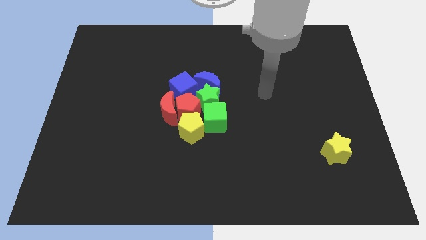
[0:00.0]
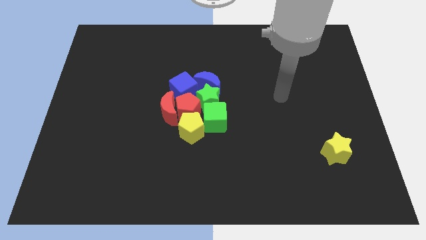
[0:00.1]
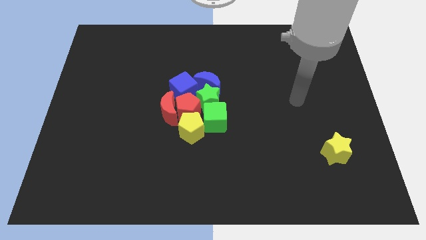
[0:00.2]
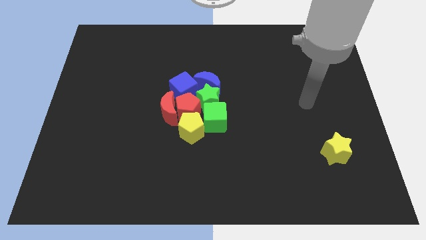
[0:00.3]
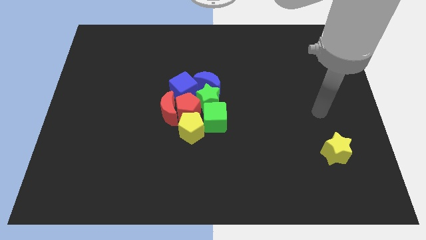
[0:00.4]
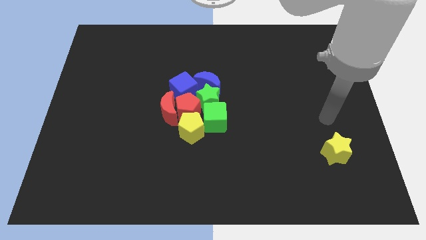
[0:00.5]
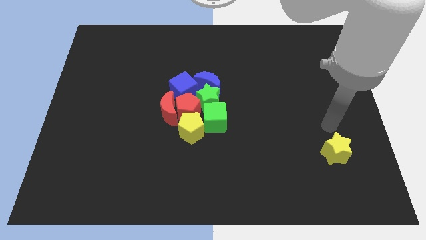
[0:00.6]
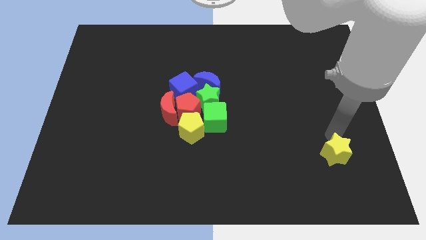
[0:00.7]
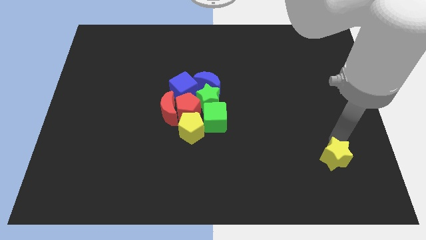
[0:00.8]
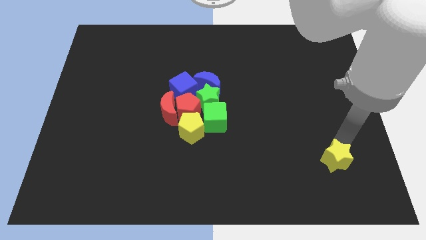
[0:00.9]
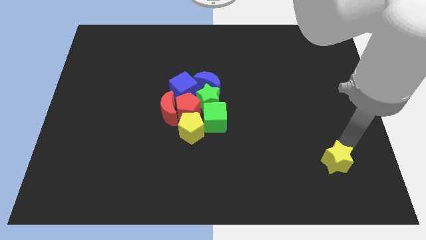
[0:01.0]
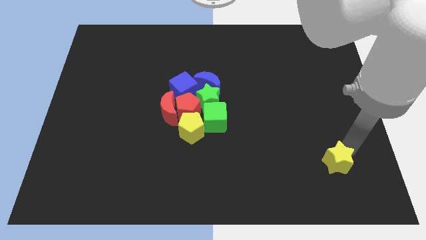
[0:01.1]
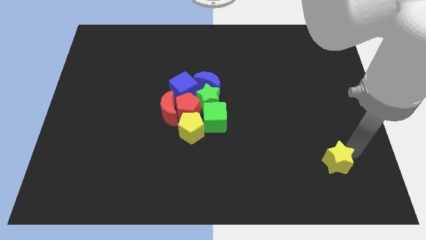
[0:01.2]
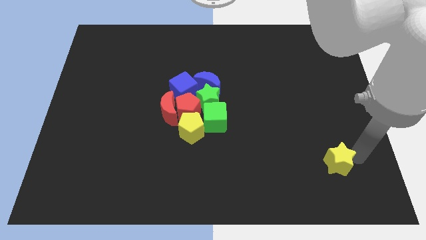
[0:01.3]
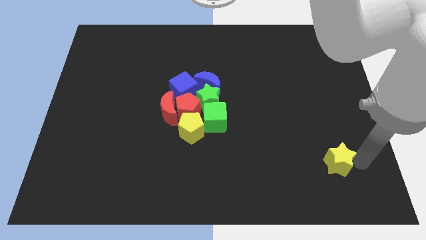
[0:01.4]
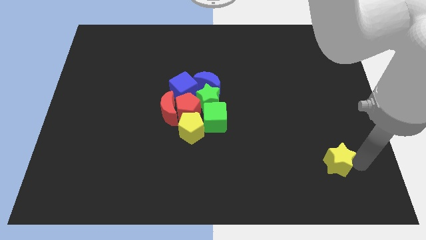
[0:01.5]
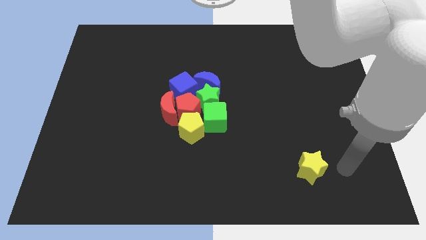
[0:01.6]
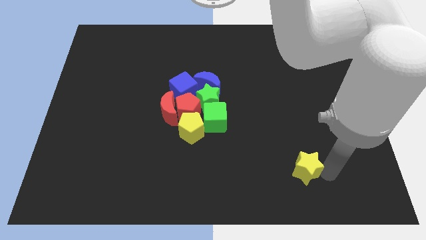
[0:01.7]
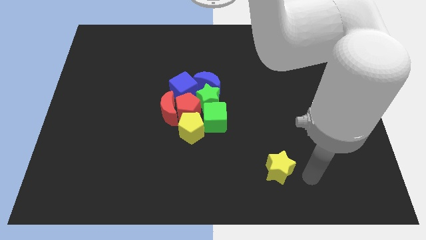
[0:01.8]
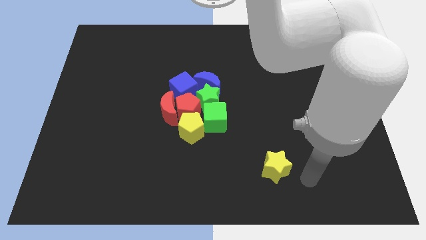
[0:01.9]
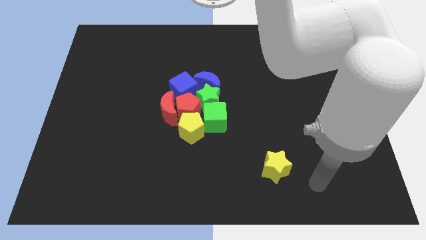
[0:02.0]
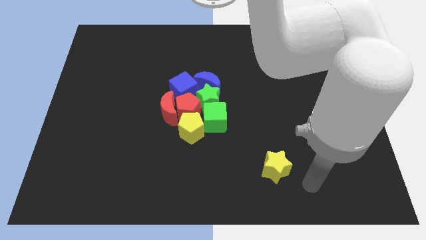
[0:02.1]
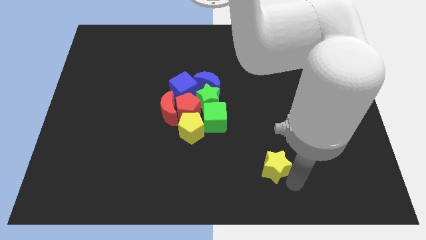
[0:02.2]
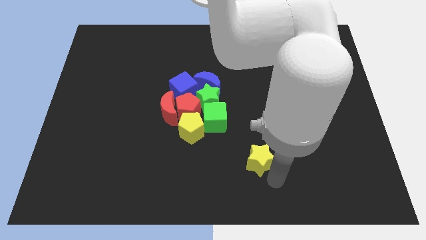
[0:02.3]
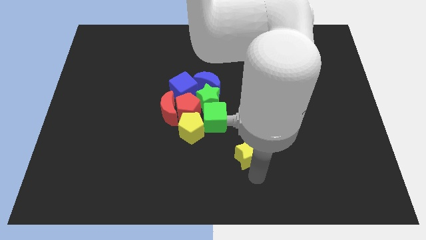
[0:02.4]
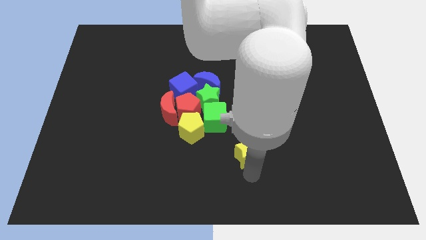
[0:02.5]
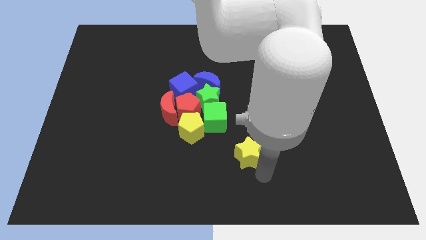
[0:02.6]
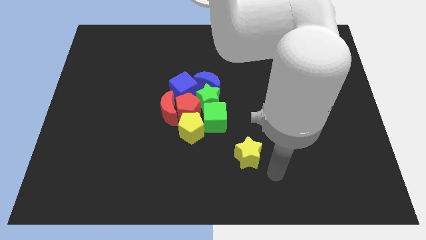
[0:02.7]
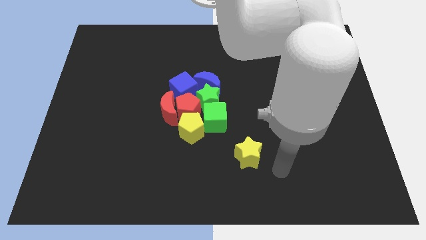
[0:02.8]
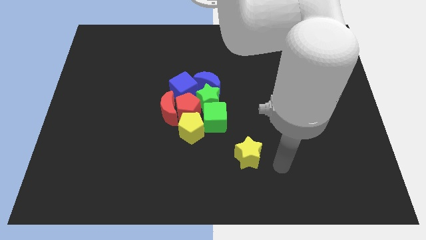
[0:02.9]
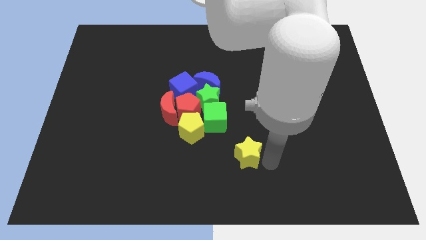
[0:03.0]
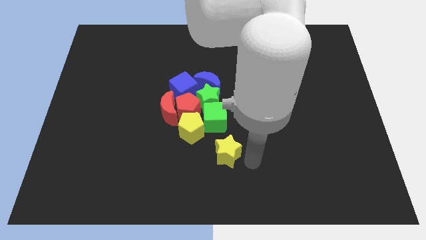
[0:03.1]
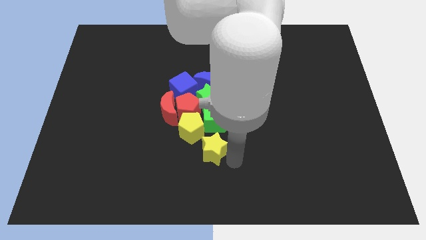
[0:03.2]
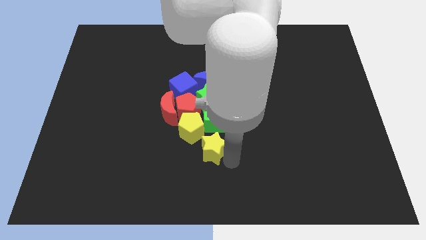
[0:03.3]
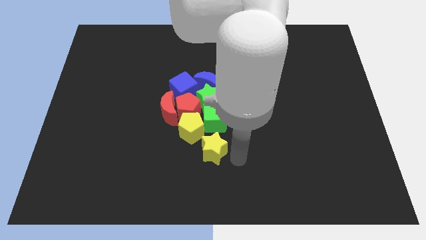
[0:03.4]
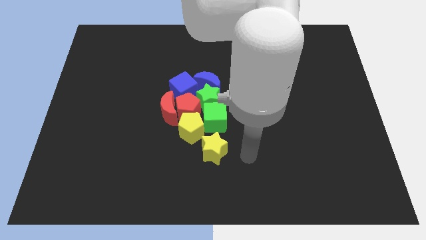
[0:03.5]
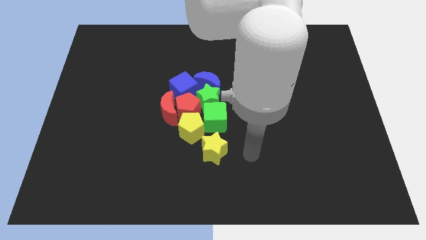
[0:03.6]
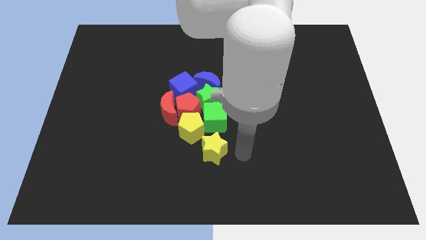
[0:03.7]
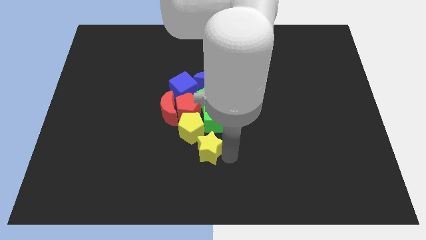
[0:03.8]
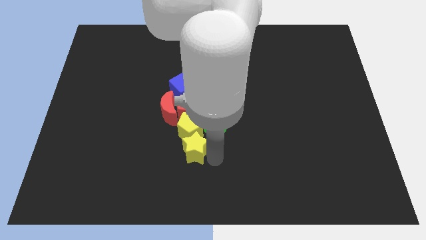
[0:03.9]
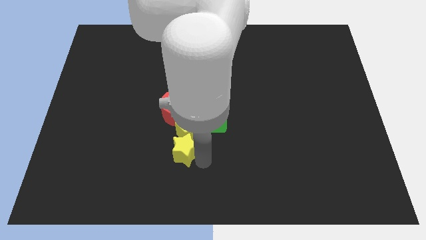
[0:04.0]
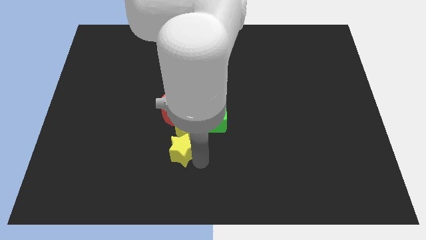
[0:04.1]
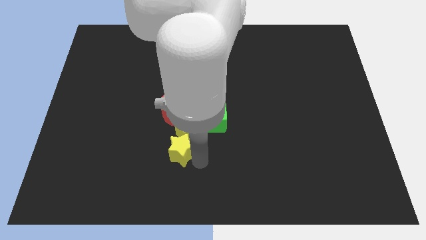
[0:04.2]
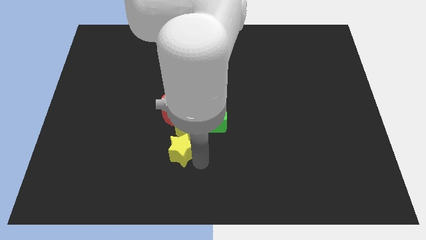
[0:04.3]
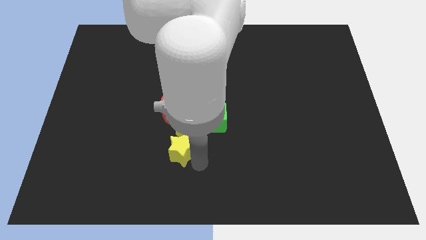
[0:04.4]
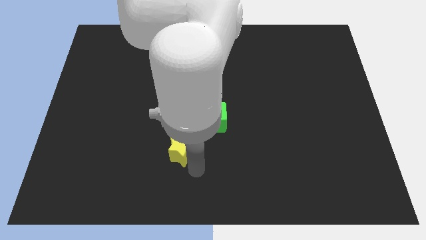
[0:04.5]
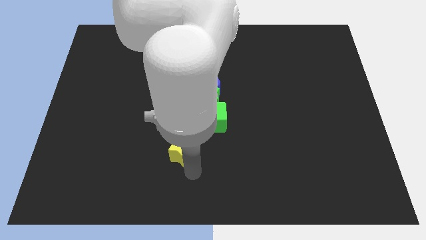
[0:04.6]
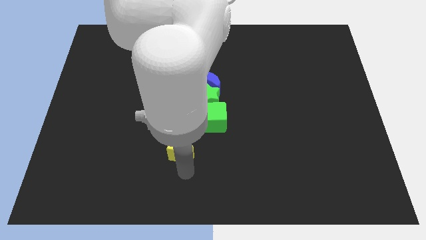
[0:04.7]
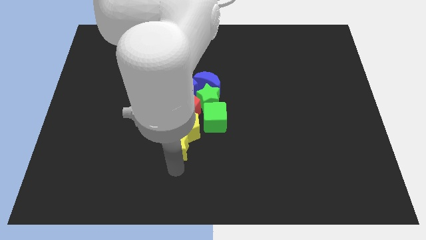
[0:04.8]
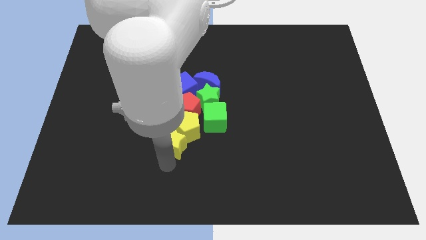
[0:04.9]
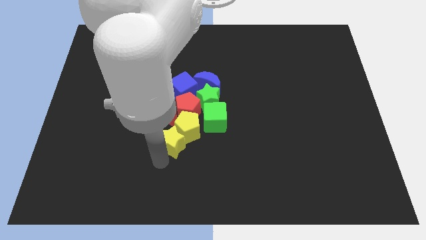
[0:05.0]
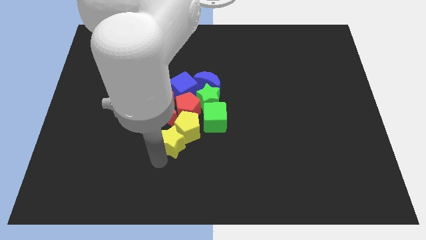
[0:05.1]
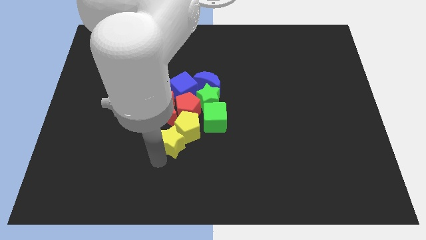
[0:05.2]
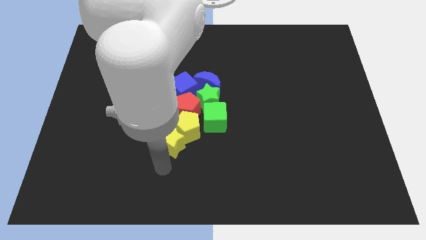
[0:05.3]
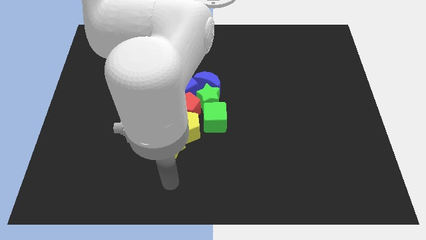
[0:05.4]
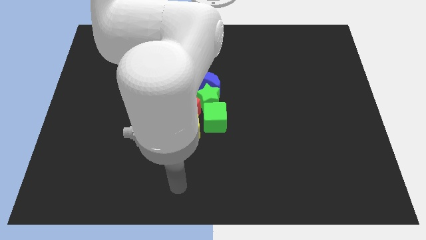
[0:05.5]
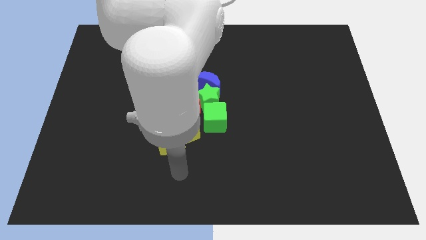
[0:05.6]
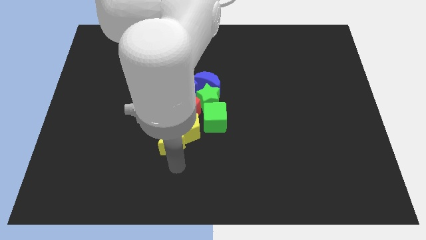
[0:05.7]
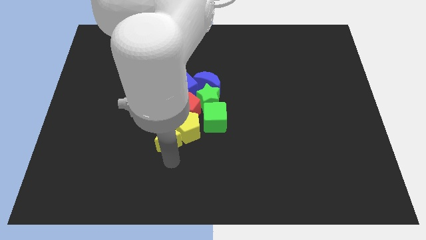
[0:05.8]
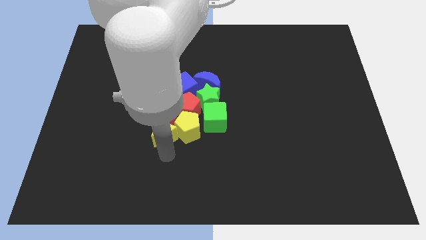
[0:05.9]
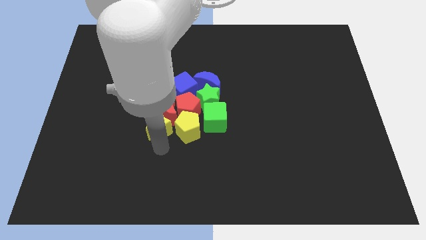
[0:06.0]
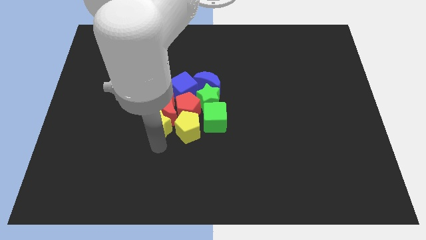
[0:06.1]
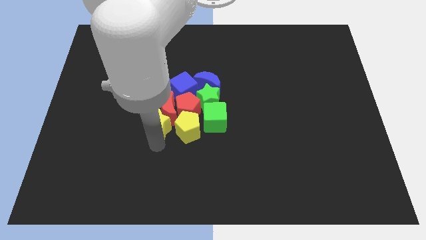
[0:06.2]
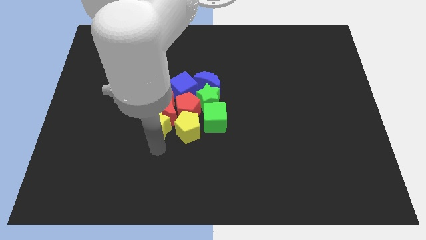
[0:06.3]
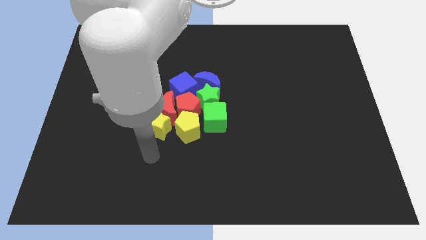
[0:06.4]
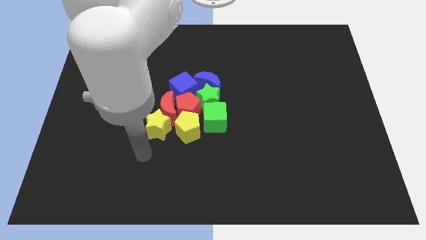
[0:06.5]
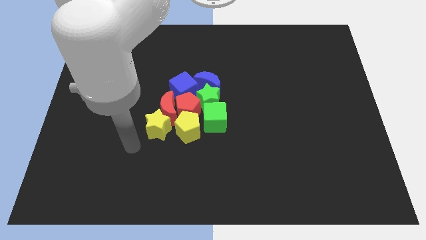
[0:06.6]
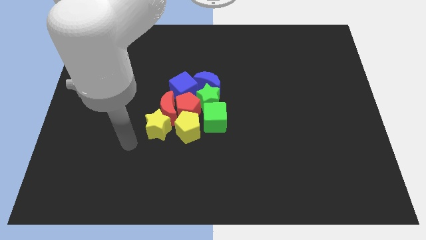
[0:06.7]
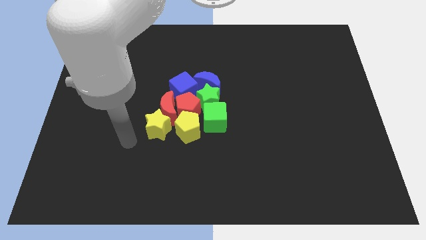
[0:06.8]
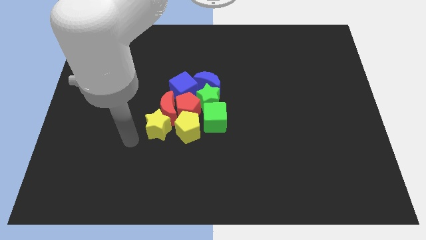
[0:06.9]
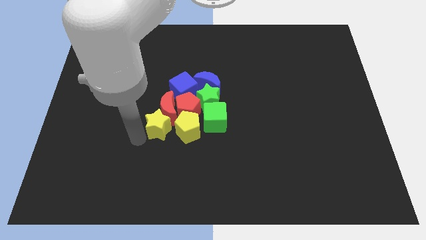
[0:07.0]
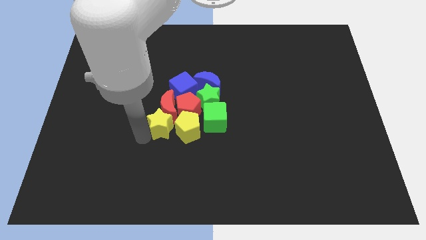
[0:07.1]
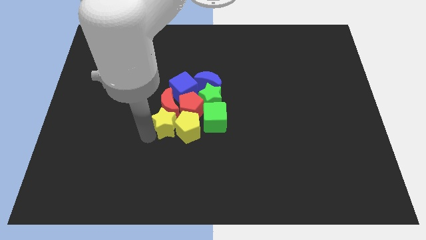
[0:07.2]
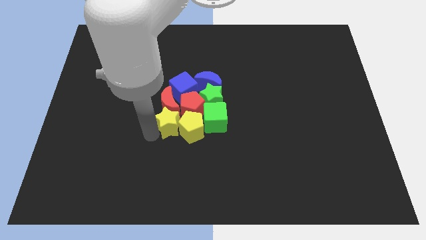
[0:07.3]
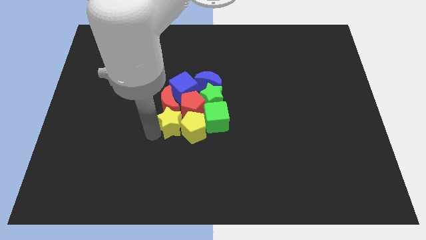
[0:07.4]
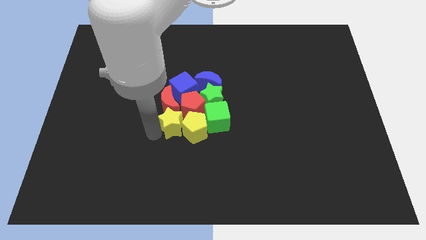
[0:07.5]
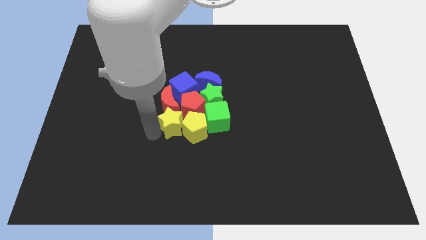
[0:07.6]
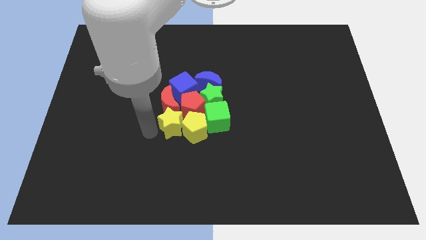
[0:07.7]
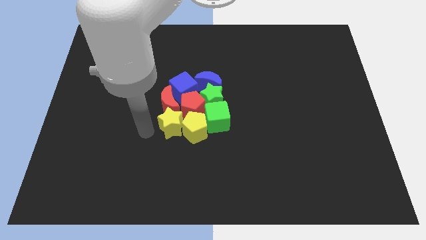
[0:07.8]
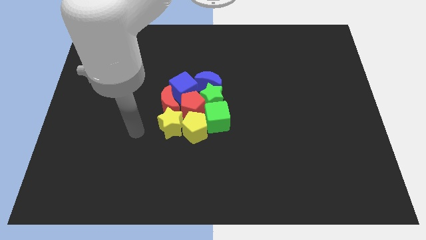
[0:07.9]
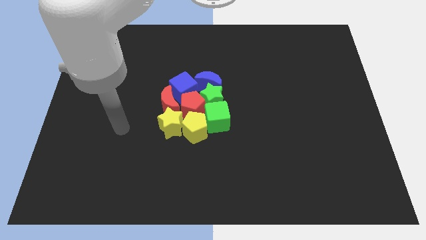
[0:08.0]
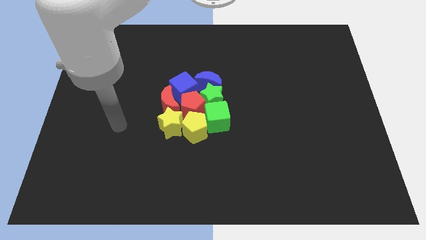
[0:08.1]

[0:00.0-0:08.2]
move the yellow star into the yellow pentagon

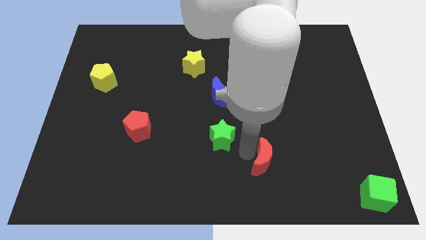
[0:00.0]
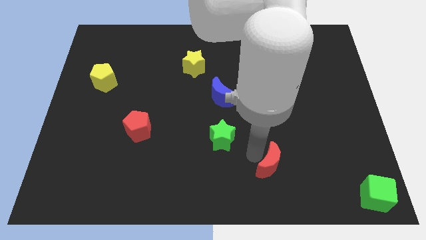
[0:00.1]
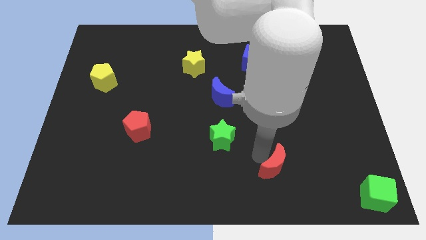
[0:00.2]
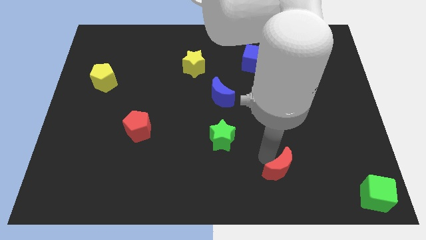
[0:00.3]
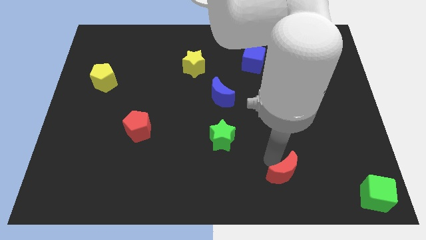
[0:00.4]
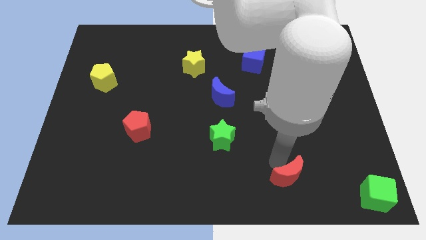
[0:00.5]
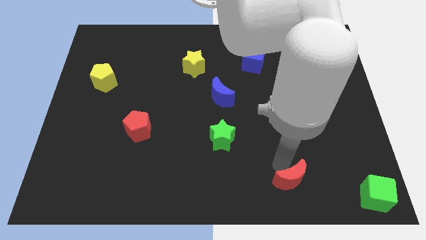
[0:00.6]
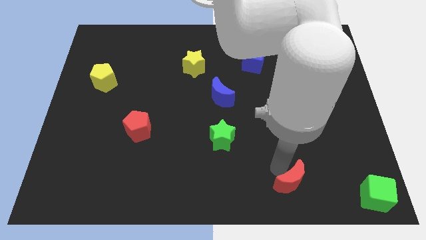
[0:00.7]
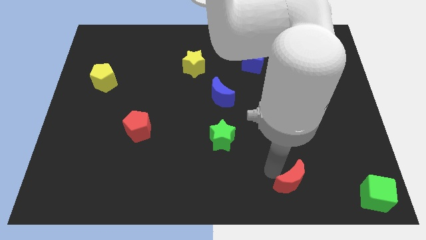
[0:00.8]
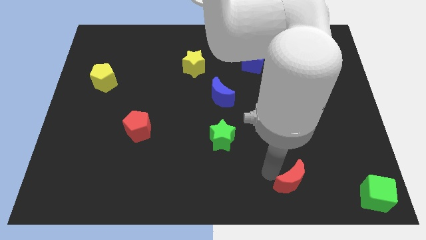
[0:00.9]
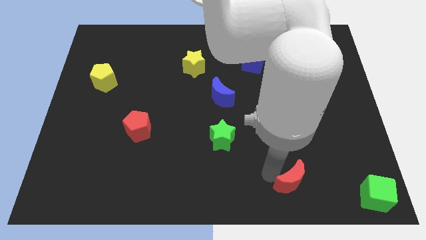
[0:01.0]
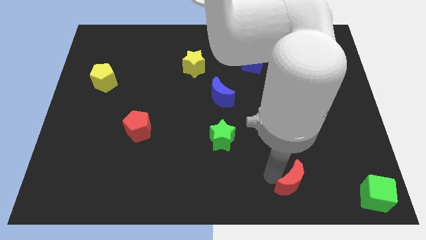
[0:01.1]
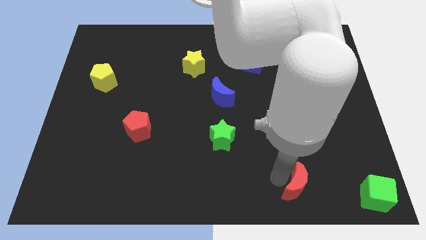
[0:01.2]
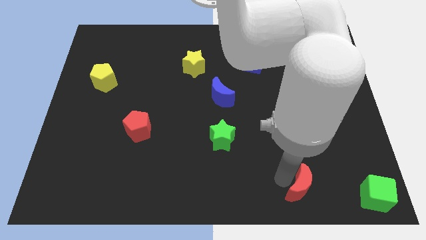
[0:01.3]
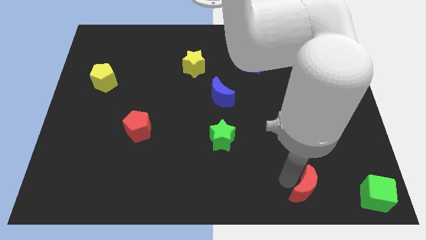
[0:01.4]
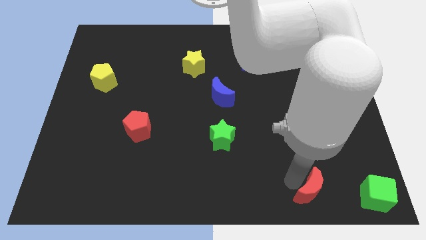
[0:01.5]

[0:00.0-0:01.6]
push the red moon towards the green cube
